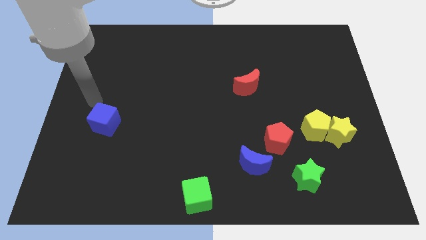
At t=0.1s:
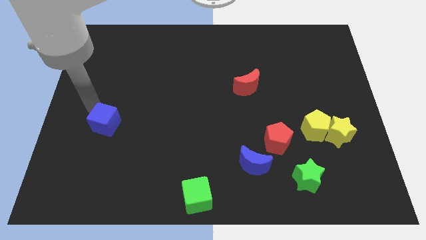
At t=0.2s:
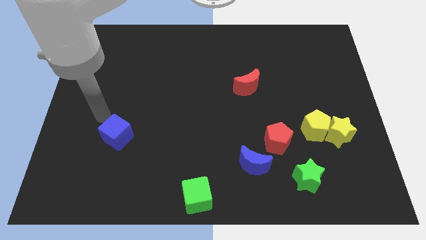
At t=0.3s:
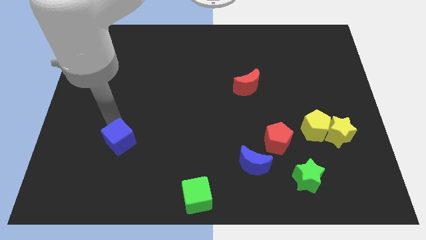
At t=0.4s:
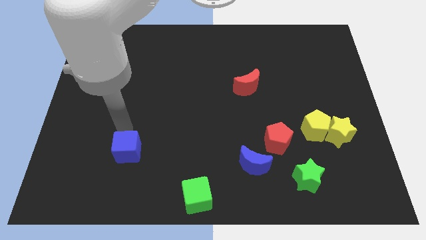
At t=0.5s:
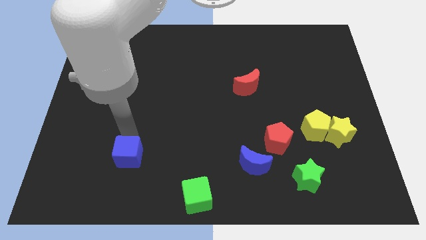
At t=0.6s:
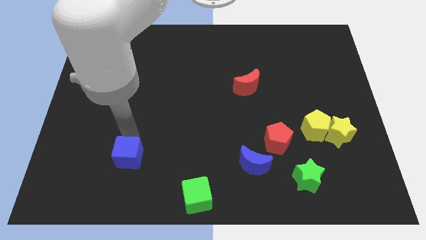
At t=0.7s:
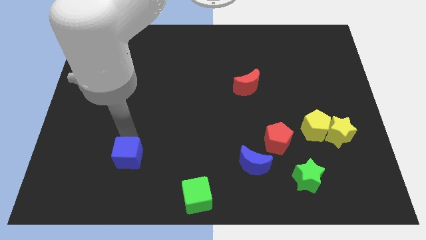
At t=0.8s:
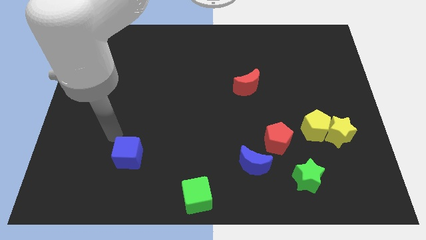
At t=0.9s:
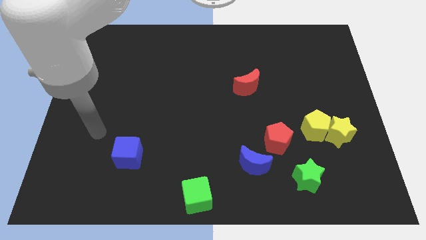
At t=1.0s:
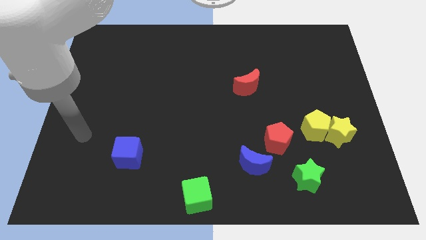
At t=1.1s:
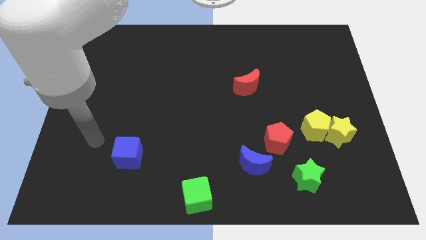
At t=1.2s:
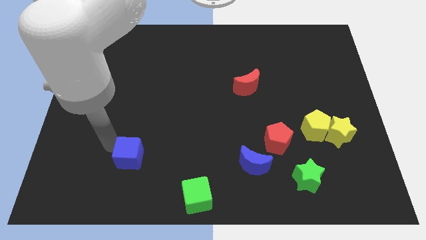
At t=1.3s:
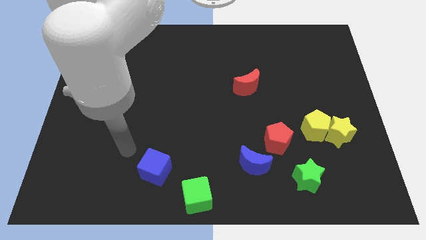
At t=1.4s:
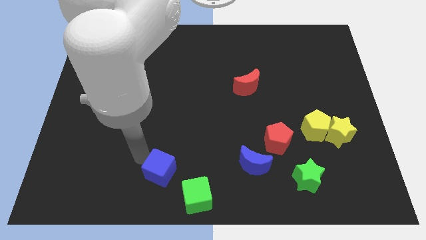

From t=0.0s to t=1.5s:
move the blue cube to the top left side of the green cube

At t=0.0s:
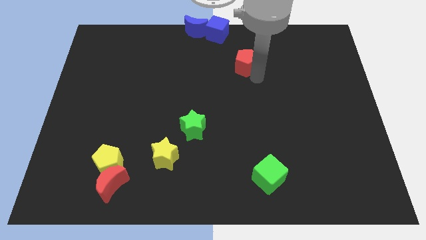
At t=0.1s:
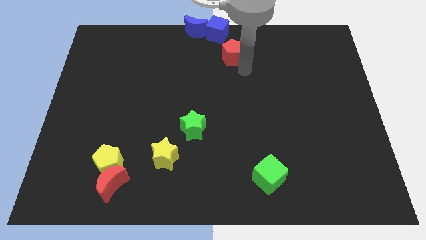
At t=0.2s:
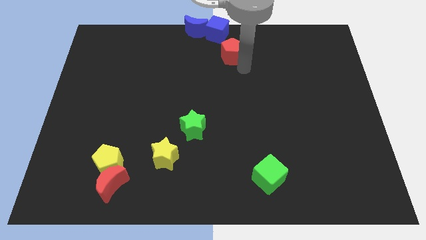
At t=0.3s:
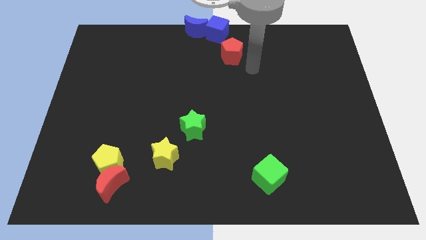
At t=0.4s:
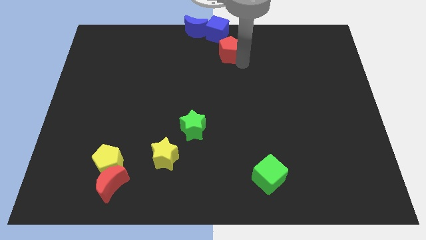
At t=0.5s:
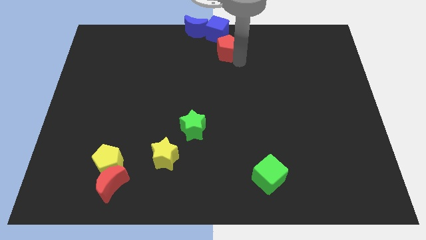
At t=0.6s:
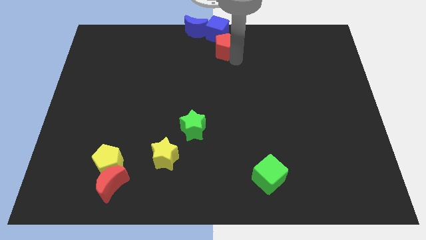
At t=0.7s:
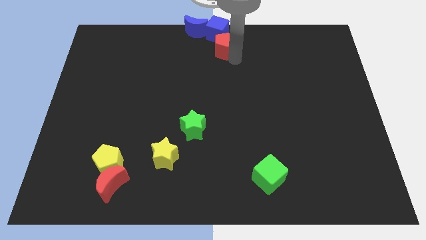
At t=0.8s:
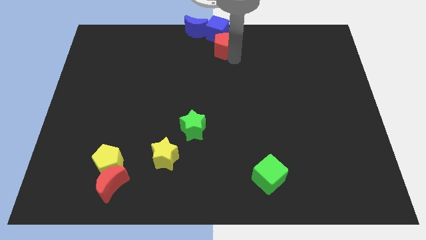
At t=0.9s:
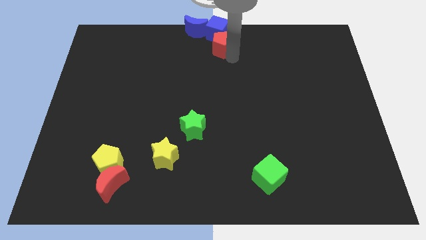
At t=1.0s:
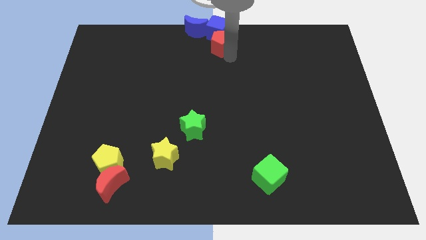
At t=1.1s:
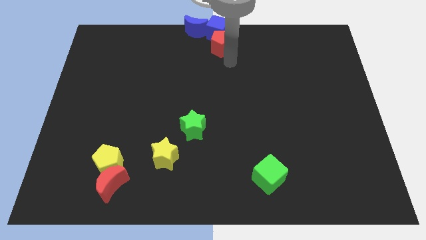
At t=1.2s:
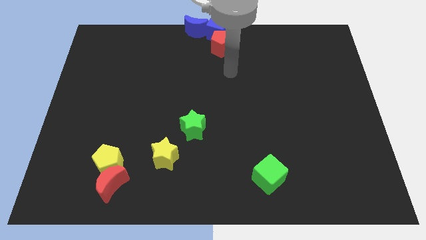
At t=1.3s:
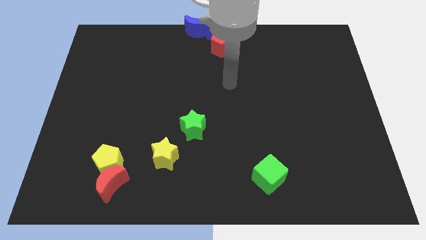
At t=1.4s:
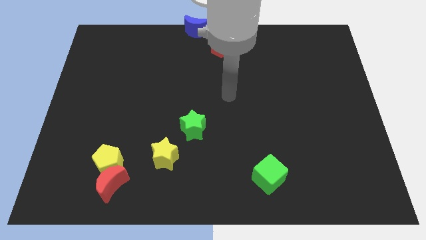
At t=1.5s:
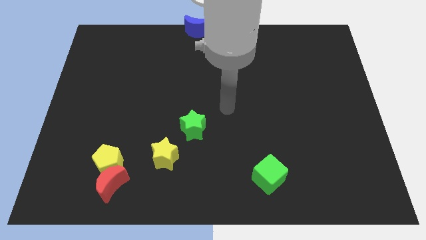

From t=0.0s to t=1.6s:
slide the red pentagon into the blue cube

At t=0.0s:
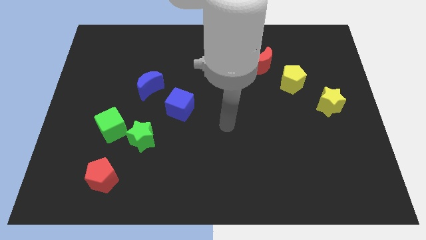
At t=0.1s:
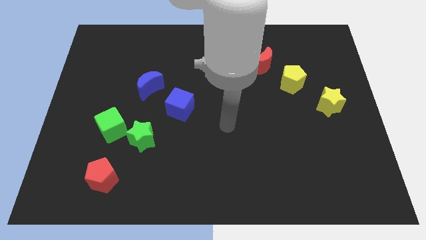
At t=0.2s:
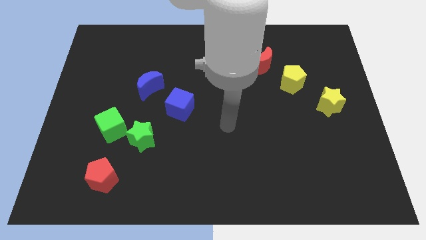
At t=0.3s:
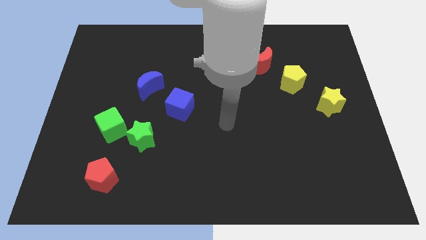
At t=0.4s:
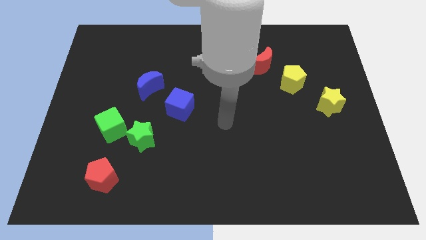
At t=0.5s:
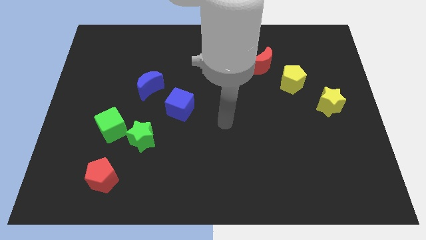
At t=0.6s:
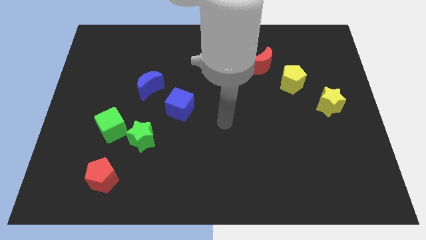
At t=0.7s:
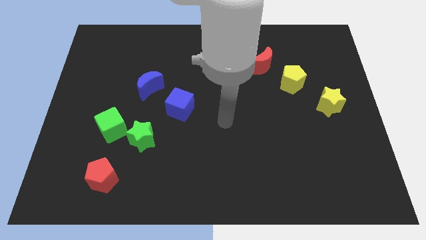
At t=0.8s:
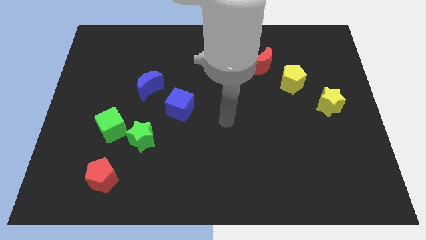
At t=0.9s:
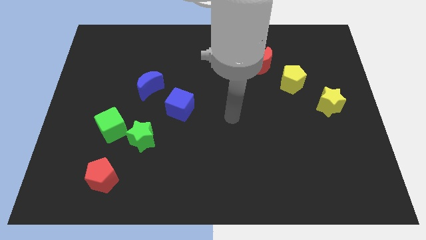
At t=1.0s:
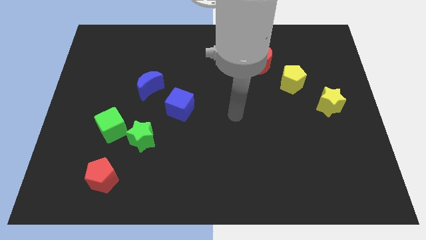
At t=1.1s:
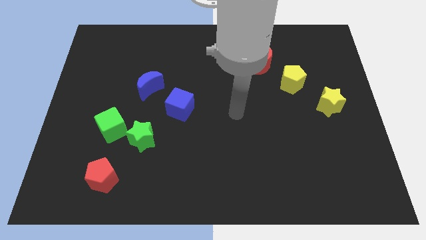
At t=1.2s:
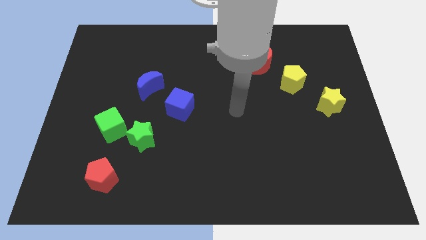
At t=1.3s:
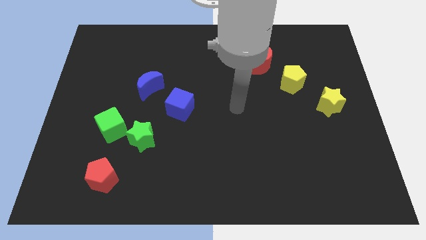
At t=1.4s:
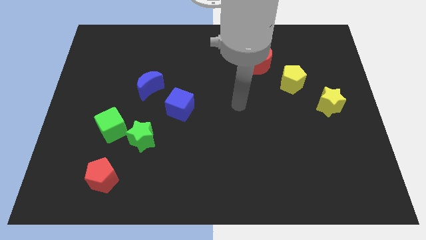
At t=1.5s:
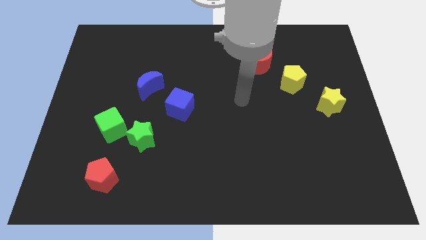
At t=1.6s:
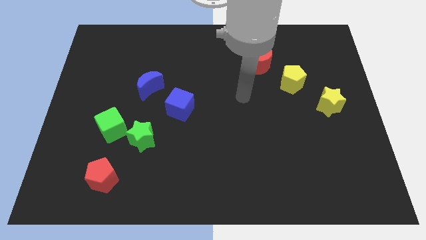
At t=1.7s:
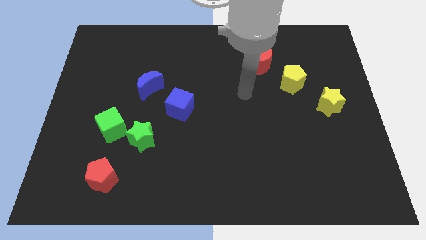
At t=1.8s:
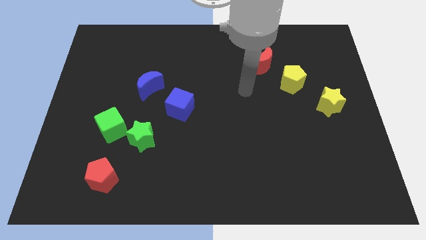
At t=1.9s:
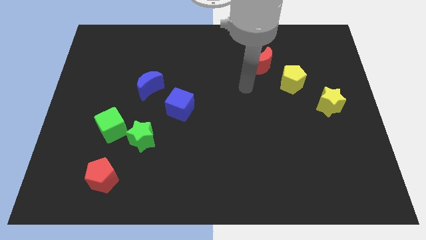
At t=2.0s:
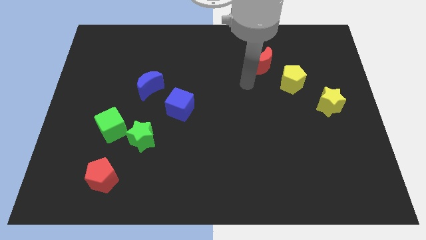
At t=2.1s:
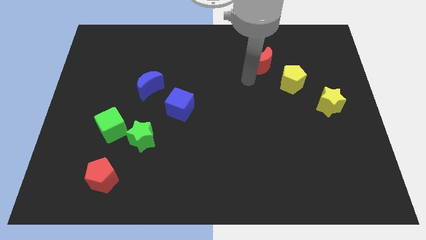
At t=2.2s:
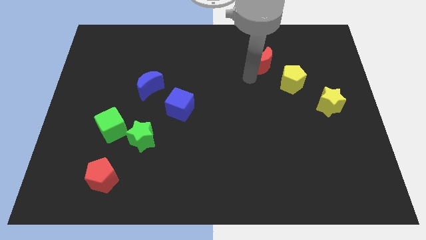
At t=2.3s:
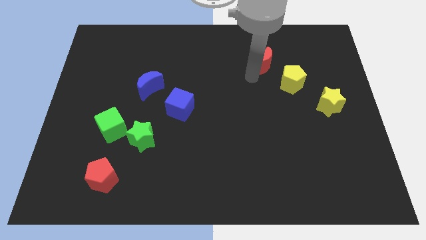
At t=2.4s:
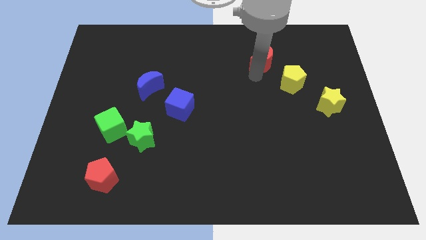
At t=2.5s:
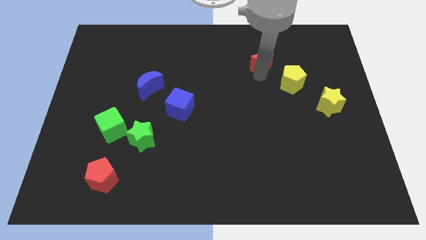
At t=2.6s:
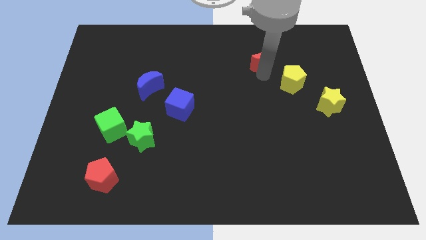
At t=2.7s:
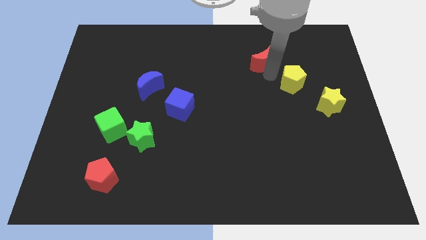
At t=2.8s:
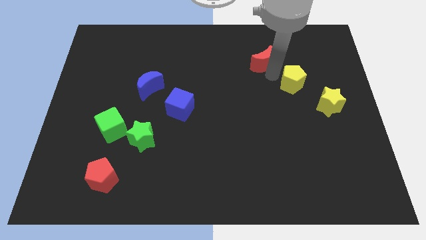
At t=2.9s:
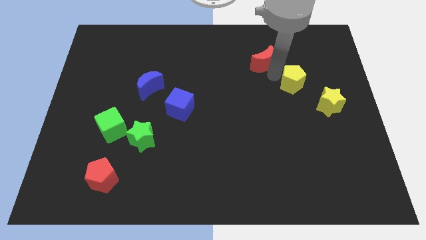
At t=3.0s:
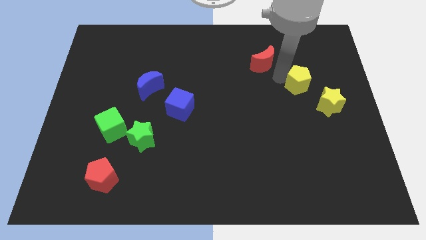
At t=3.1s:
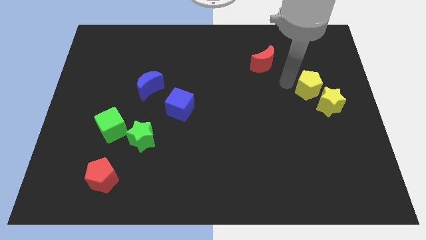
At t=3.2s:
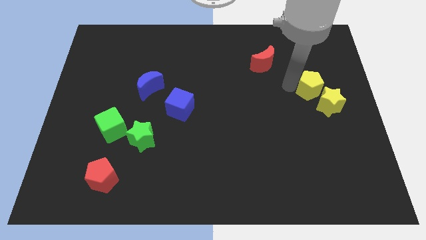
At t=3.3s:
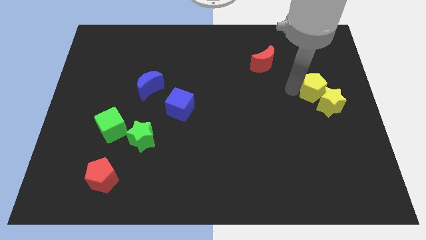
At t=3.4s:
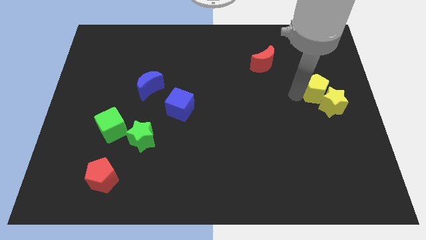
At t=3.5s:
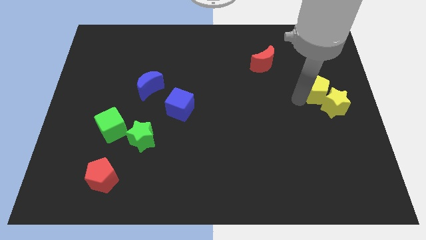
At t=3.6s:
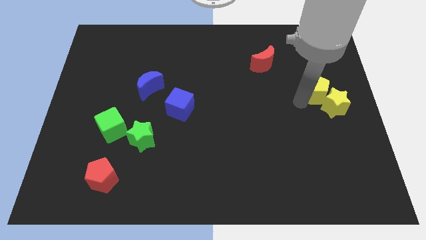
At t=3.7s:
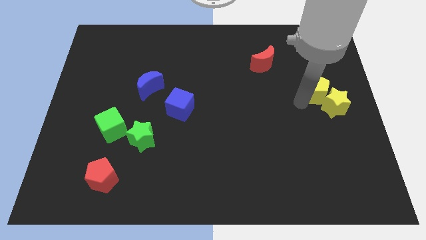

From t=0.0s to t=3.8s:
move yellow pentagon into the yellow star

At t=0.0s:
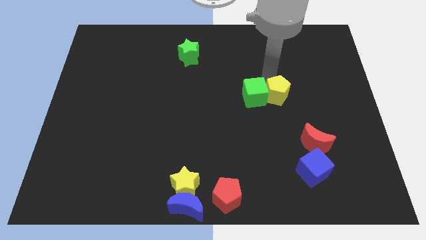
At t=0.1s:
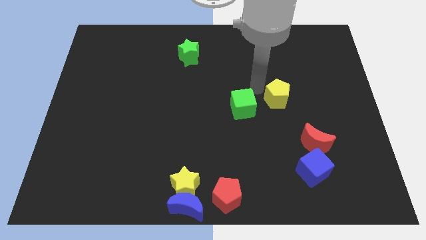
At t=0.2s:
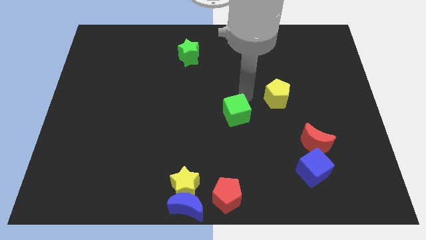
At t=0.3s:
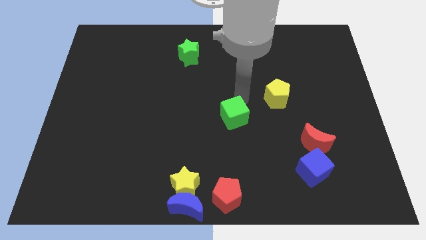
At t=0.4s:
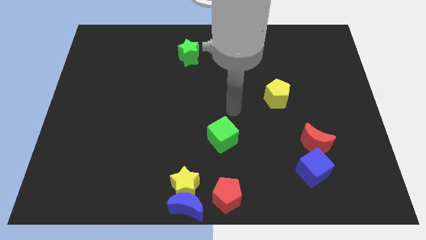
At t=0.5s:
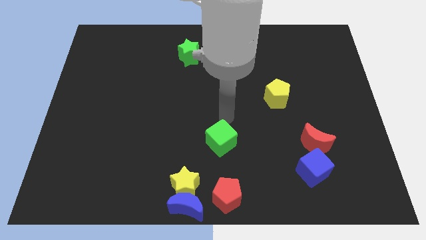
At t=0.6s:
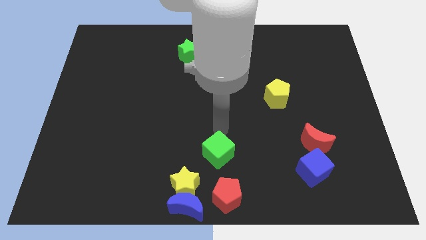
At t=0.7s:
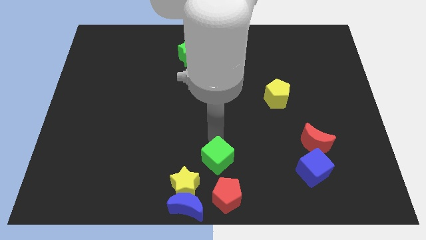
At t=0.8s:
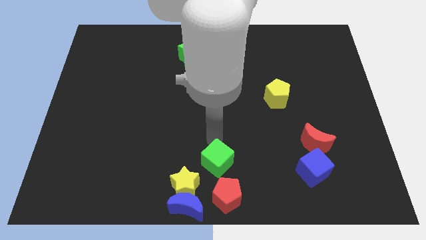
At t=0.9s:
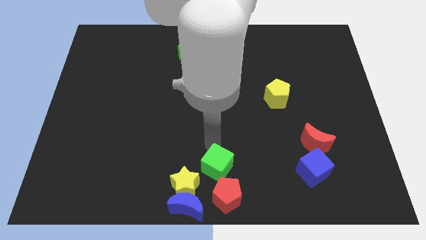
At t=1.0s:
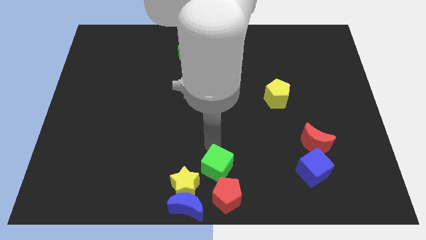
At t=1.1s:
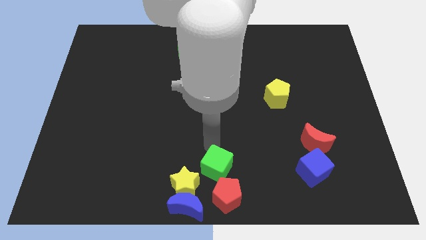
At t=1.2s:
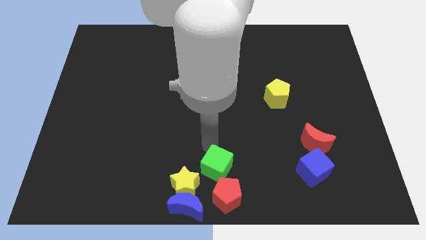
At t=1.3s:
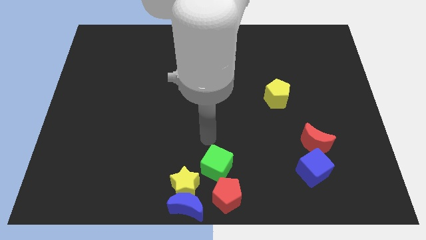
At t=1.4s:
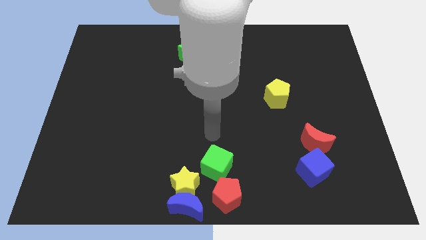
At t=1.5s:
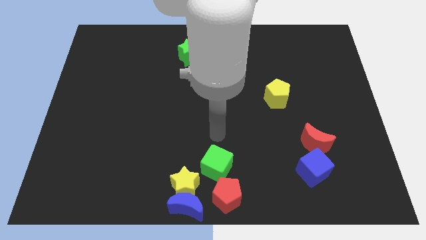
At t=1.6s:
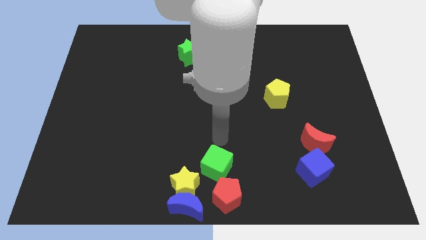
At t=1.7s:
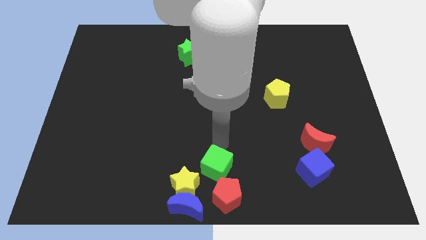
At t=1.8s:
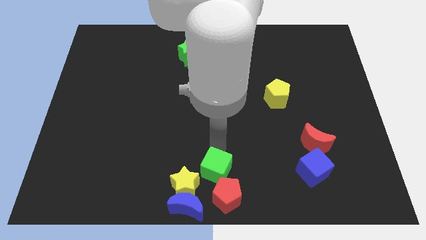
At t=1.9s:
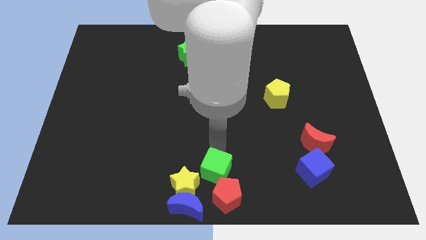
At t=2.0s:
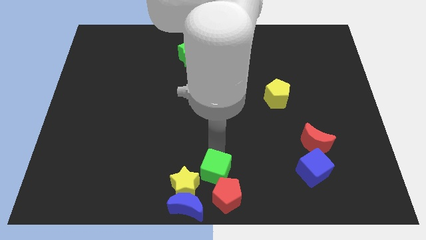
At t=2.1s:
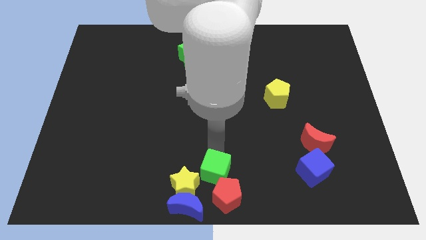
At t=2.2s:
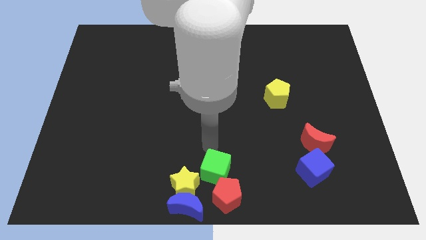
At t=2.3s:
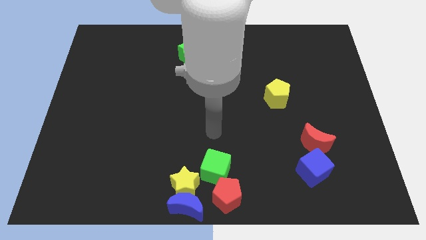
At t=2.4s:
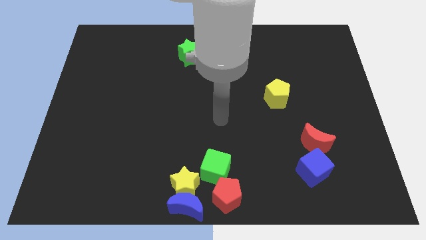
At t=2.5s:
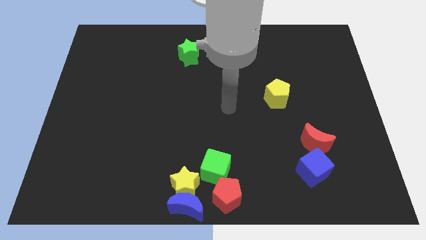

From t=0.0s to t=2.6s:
place the green cube at the top left side of red pentagon
